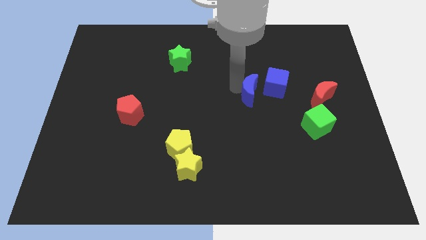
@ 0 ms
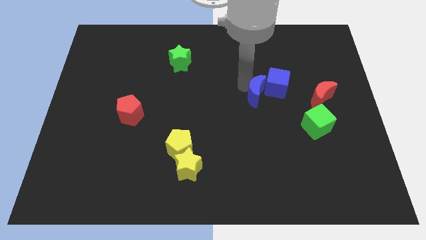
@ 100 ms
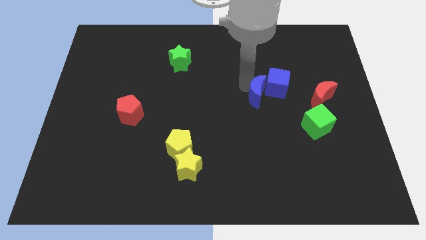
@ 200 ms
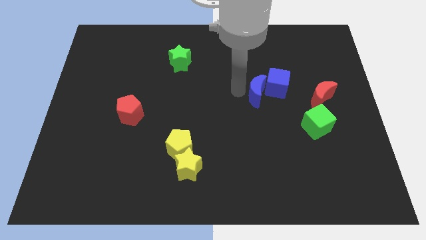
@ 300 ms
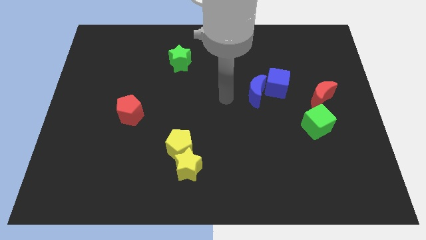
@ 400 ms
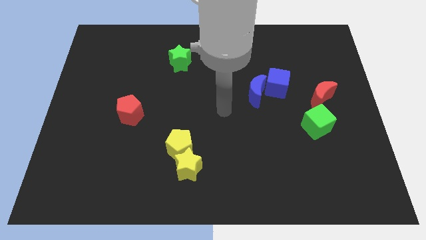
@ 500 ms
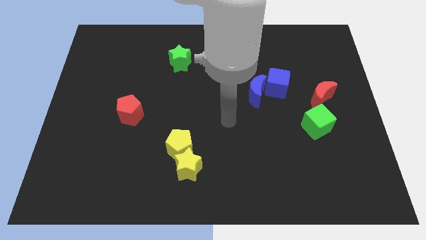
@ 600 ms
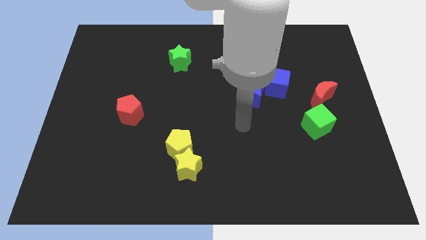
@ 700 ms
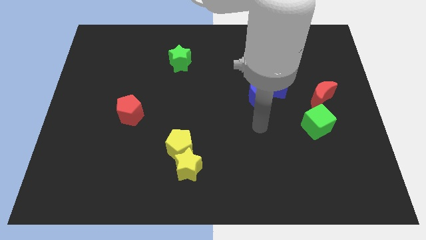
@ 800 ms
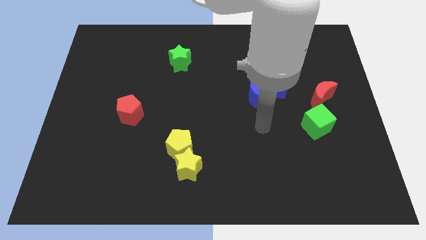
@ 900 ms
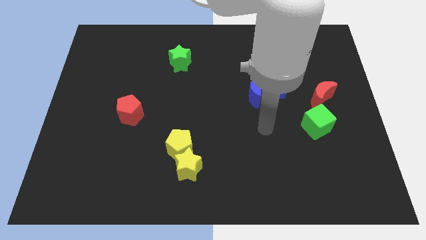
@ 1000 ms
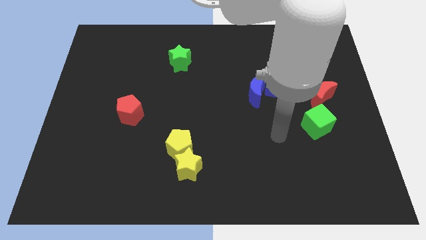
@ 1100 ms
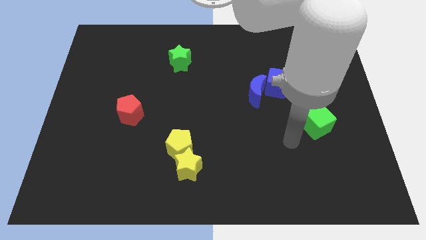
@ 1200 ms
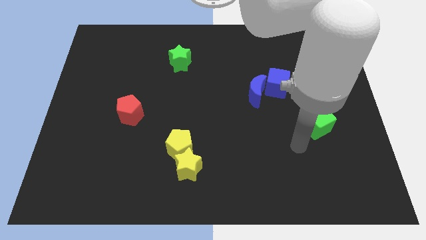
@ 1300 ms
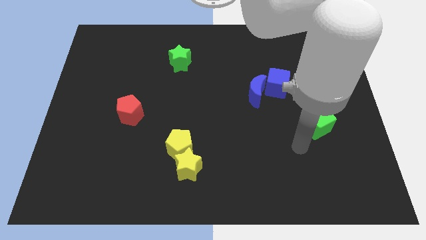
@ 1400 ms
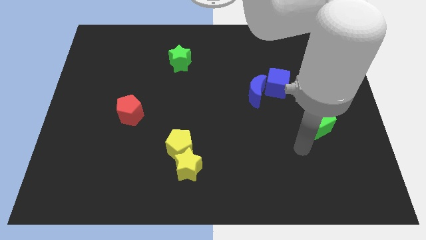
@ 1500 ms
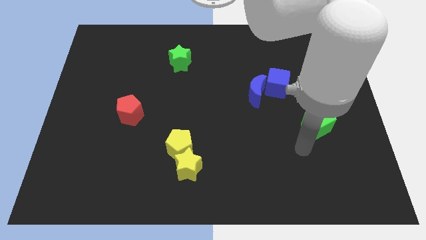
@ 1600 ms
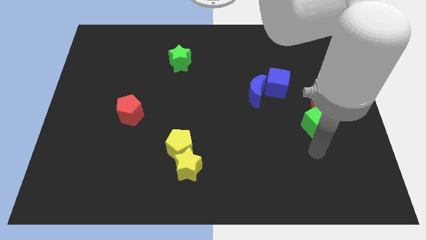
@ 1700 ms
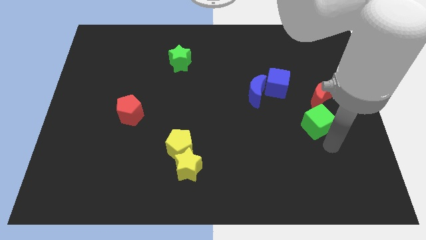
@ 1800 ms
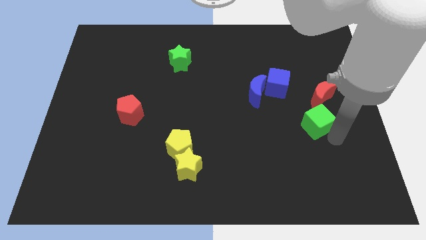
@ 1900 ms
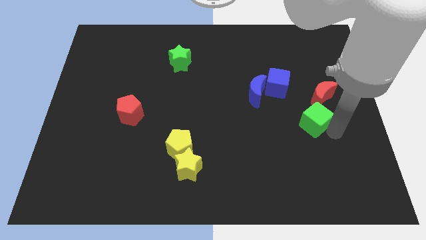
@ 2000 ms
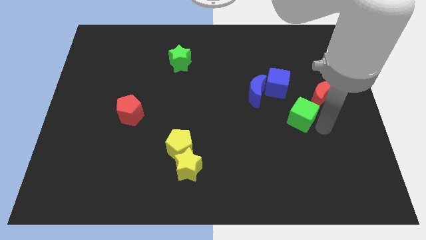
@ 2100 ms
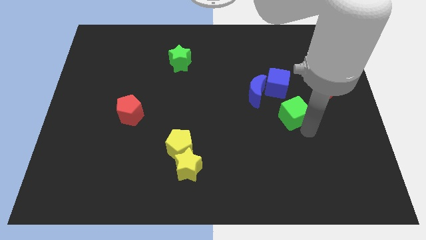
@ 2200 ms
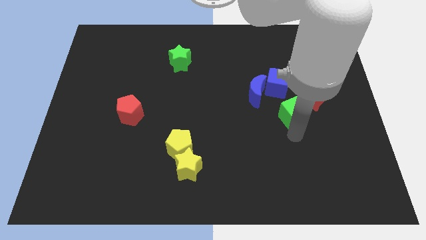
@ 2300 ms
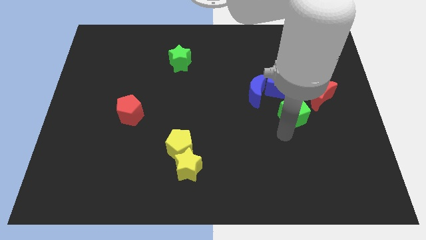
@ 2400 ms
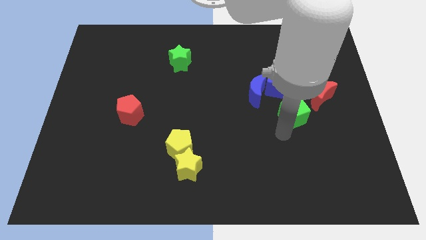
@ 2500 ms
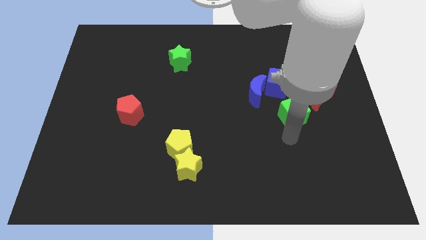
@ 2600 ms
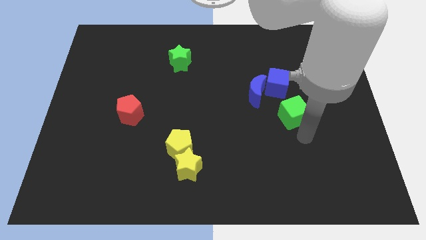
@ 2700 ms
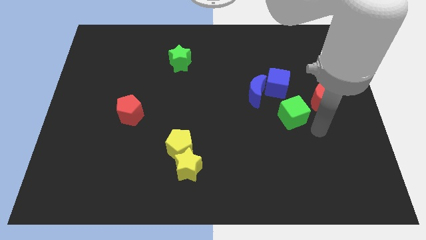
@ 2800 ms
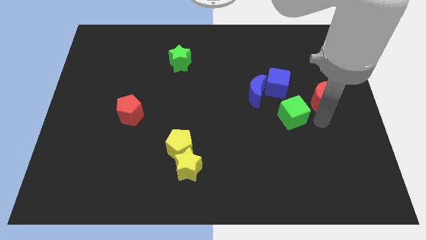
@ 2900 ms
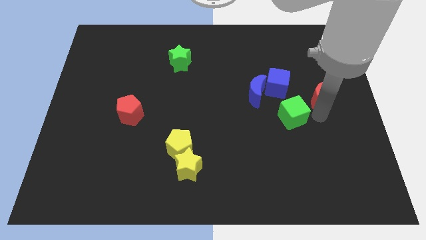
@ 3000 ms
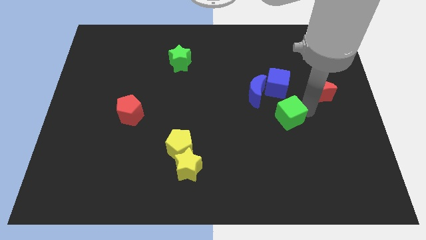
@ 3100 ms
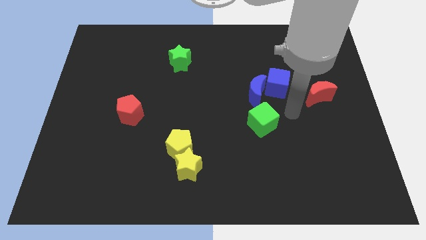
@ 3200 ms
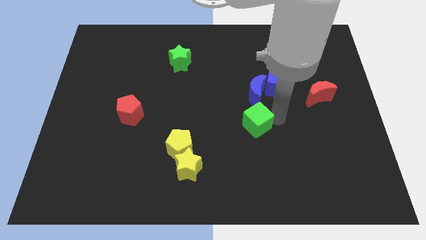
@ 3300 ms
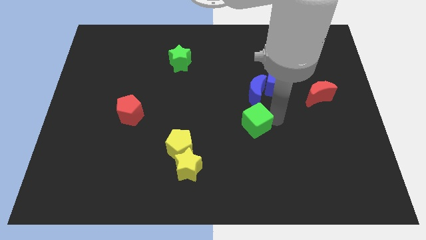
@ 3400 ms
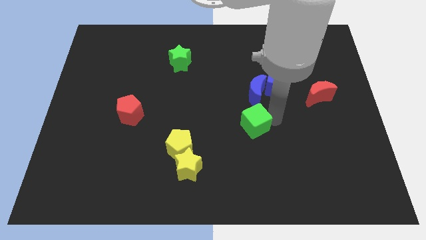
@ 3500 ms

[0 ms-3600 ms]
slide the green cube vertically at the bottom of the blue moon

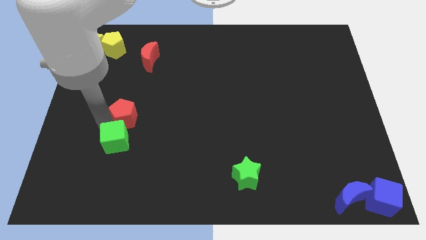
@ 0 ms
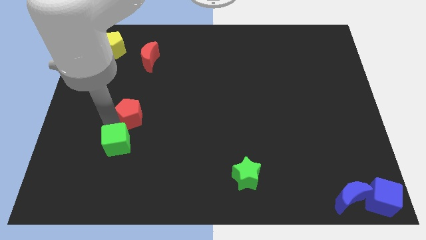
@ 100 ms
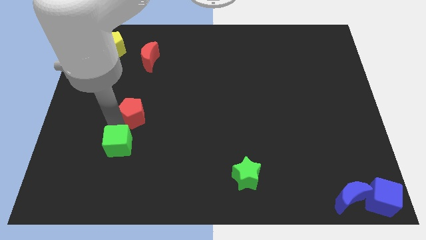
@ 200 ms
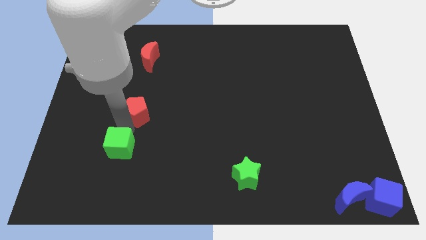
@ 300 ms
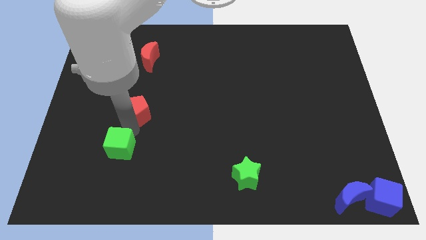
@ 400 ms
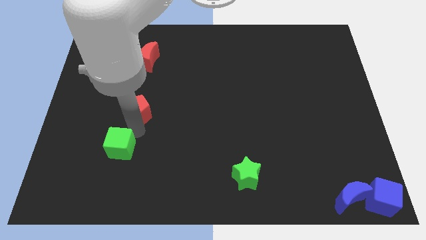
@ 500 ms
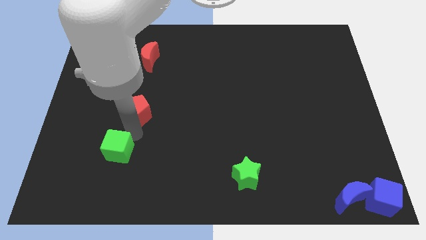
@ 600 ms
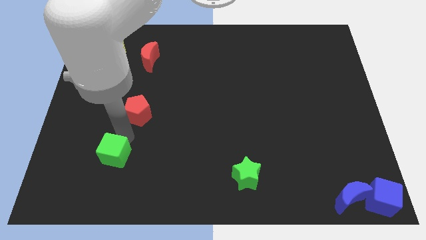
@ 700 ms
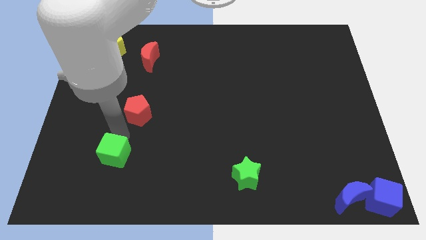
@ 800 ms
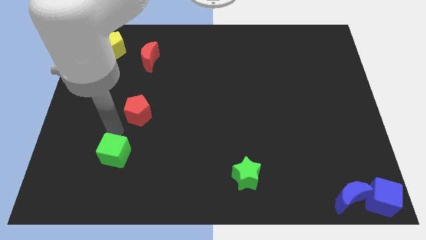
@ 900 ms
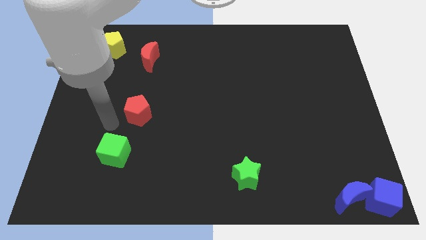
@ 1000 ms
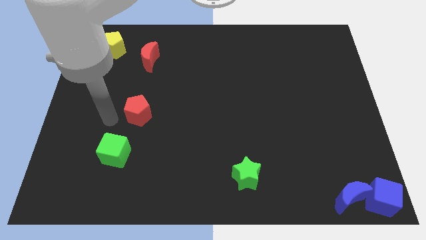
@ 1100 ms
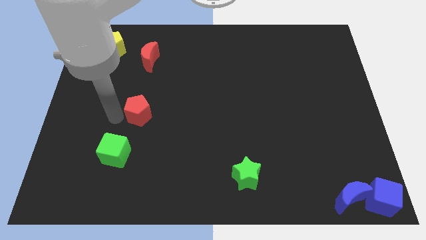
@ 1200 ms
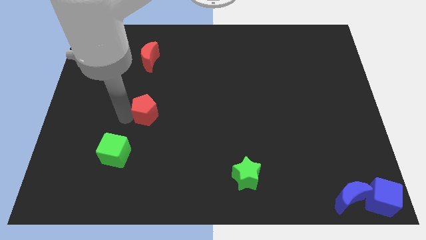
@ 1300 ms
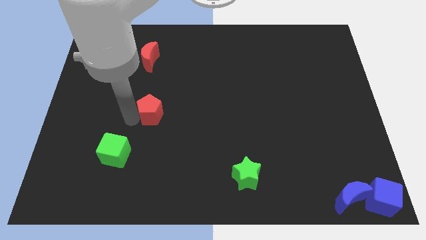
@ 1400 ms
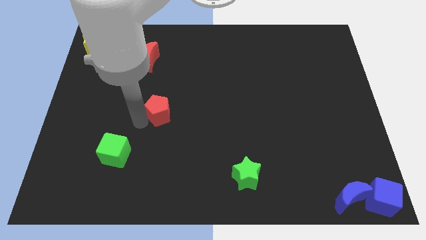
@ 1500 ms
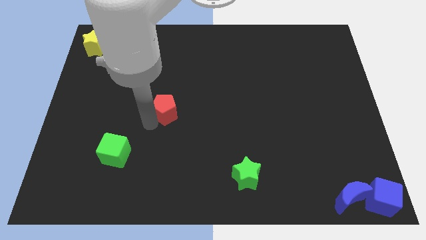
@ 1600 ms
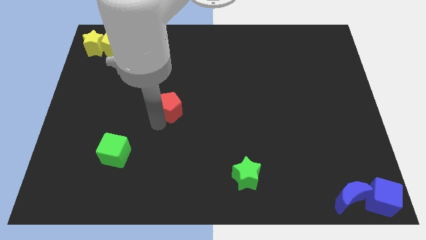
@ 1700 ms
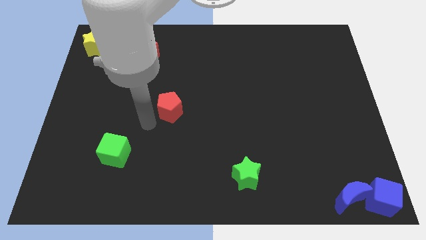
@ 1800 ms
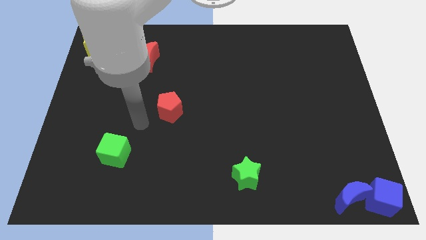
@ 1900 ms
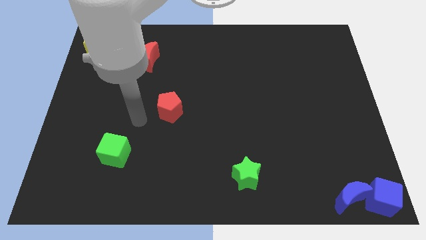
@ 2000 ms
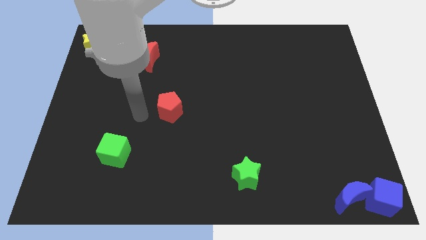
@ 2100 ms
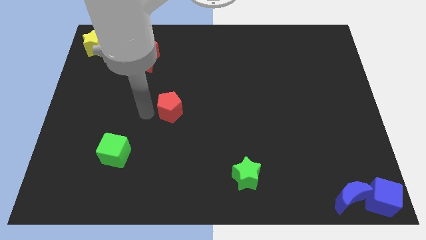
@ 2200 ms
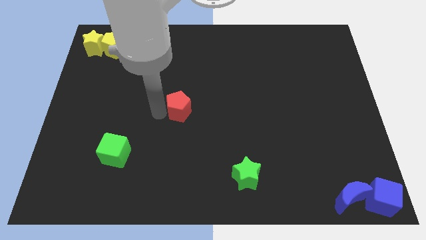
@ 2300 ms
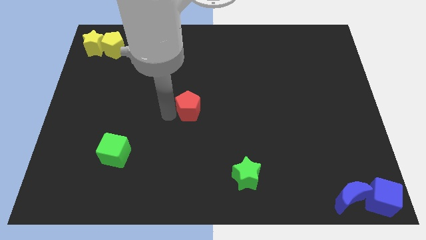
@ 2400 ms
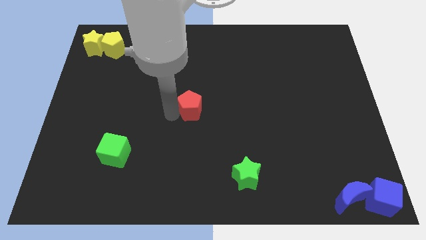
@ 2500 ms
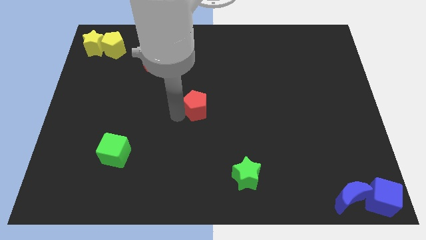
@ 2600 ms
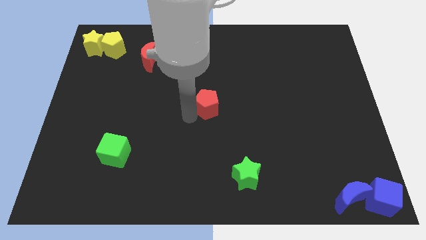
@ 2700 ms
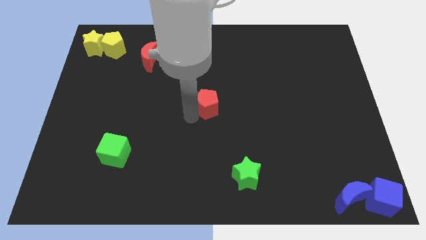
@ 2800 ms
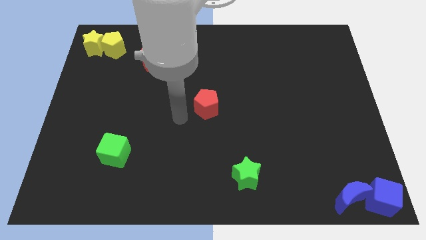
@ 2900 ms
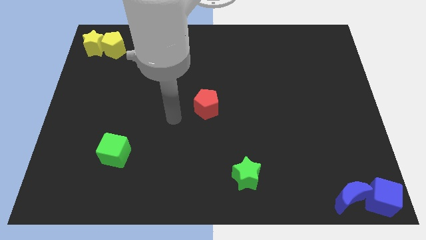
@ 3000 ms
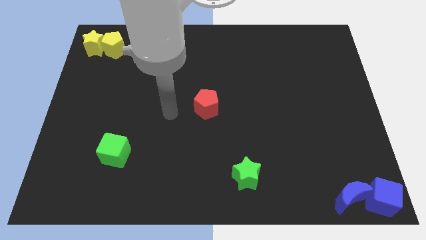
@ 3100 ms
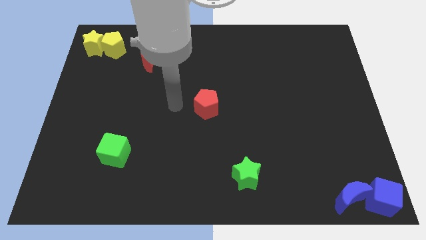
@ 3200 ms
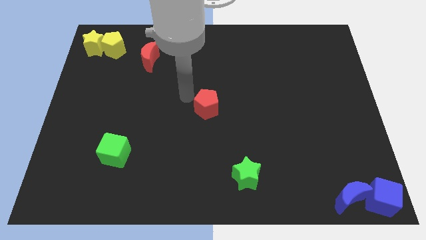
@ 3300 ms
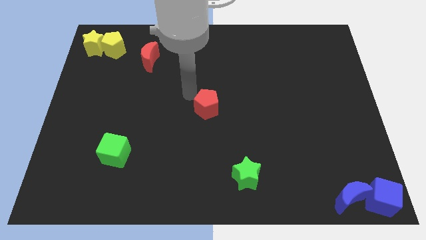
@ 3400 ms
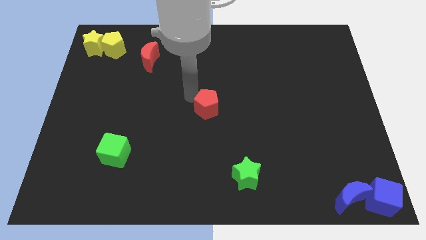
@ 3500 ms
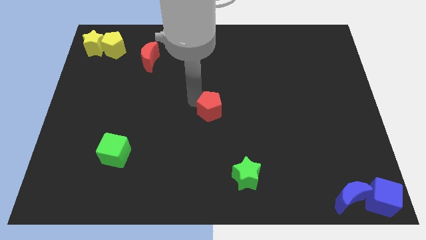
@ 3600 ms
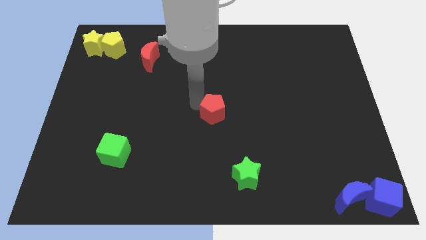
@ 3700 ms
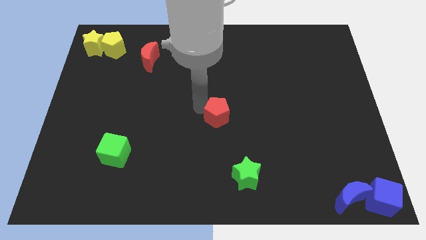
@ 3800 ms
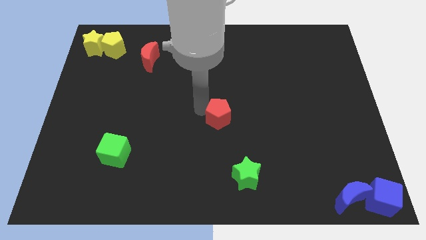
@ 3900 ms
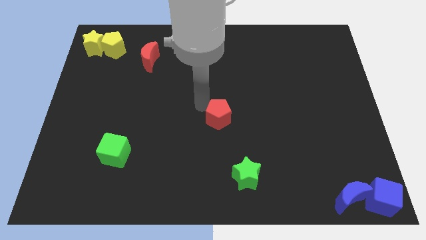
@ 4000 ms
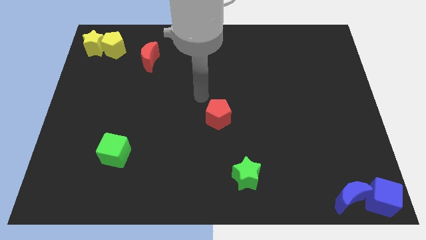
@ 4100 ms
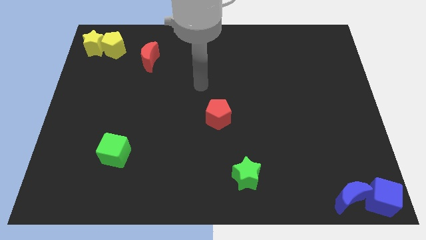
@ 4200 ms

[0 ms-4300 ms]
place red pentagon to the center

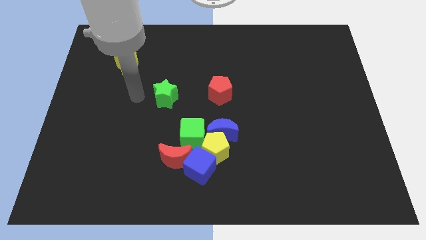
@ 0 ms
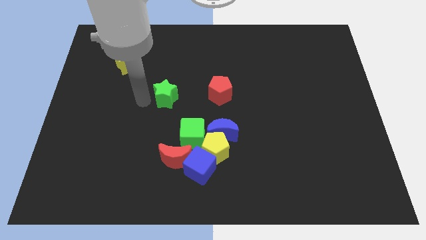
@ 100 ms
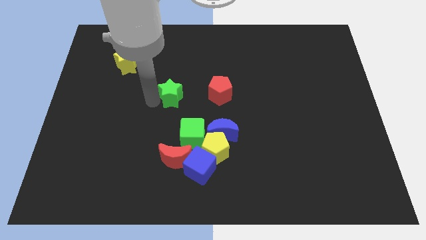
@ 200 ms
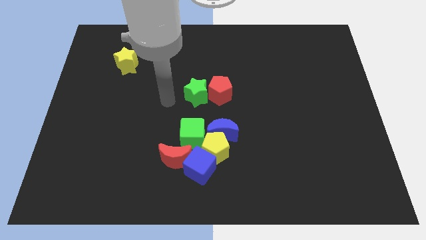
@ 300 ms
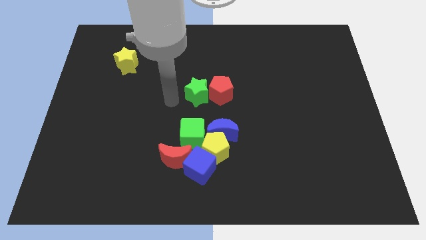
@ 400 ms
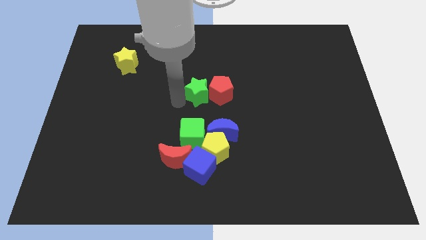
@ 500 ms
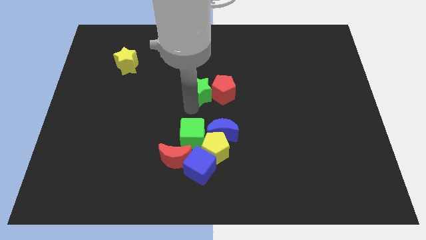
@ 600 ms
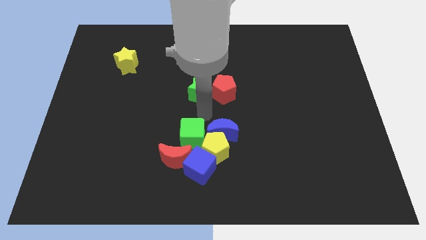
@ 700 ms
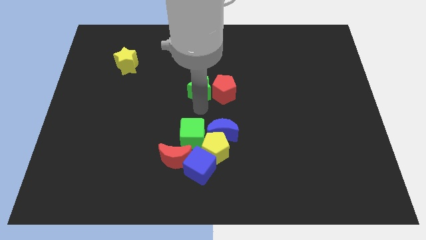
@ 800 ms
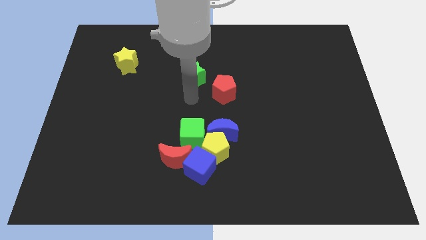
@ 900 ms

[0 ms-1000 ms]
push the green star parallel to the green cube

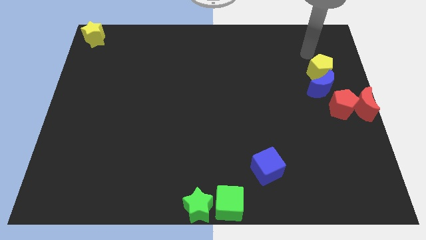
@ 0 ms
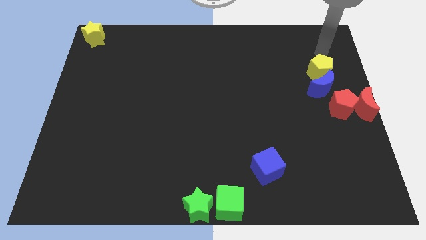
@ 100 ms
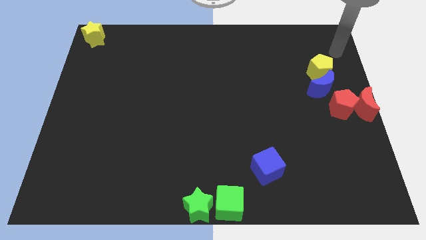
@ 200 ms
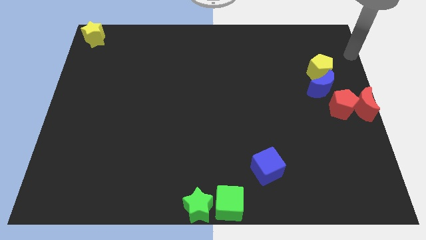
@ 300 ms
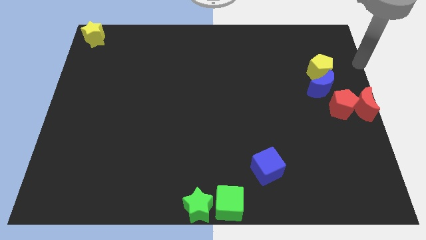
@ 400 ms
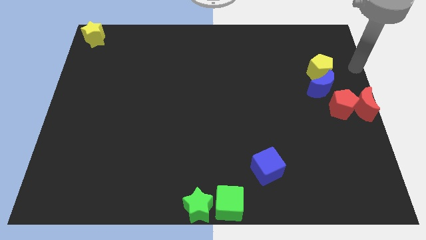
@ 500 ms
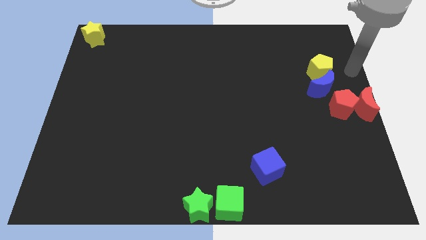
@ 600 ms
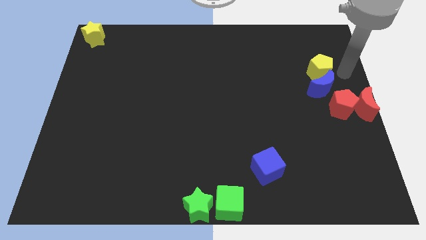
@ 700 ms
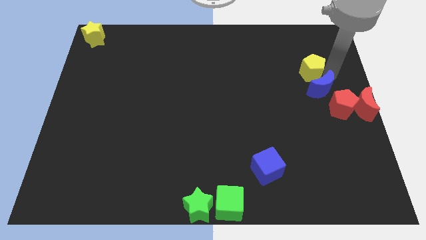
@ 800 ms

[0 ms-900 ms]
move the arm to the yellow pentagon
